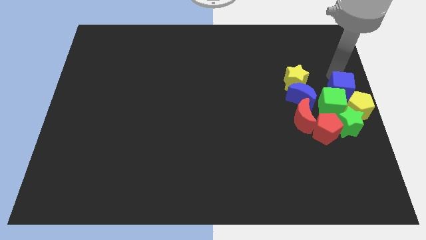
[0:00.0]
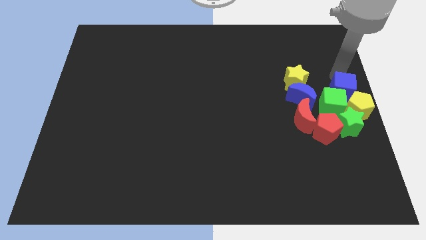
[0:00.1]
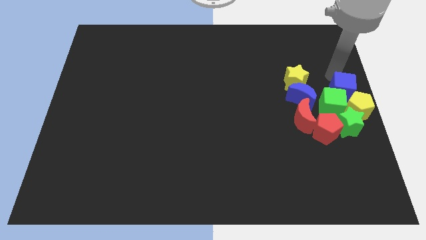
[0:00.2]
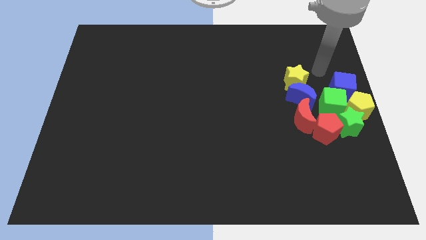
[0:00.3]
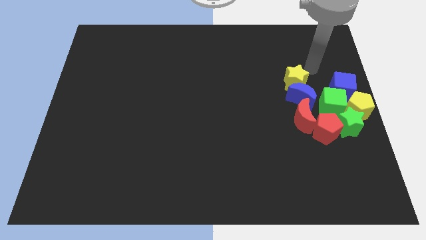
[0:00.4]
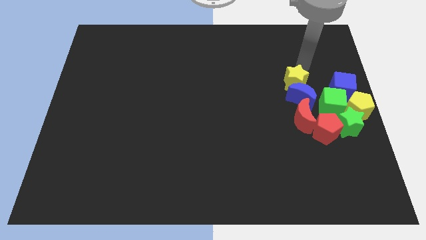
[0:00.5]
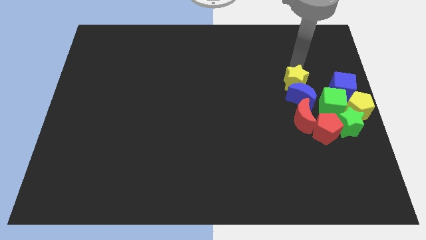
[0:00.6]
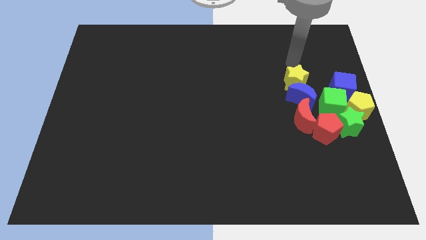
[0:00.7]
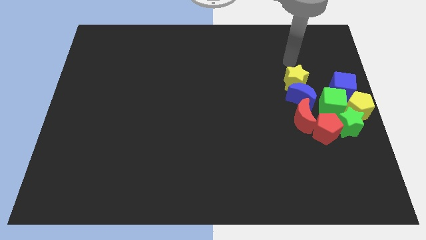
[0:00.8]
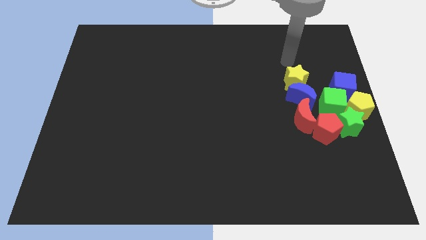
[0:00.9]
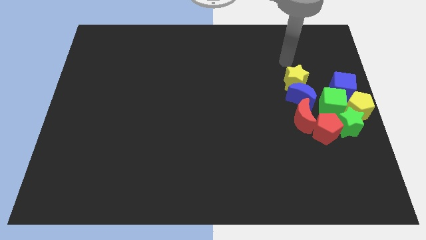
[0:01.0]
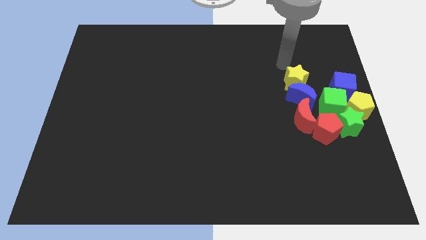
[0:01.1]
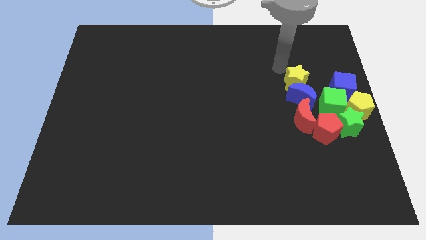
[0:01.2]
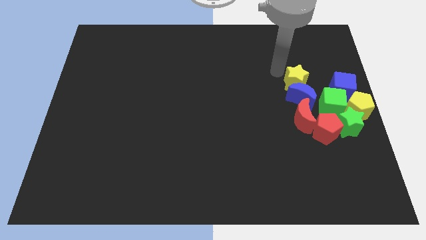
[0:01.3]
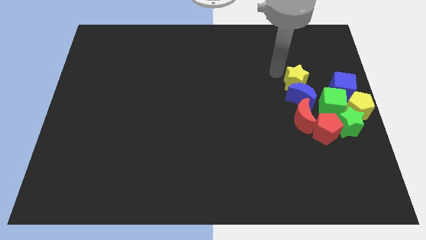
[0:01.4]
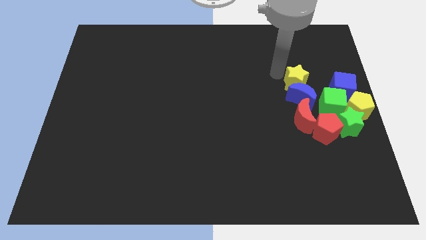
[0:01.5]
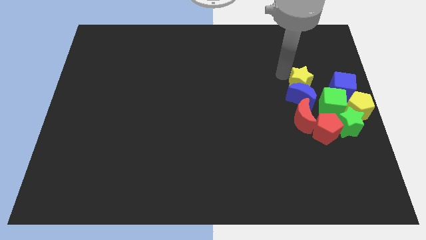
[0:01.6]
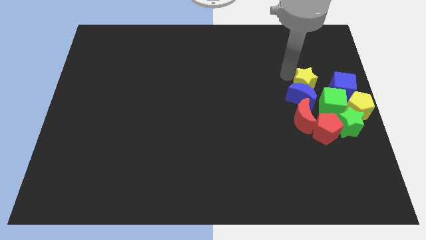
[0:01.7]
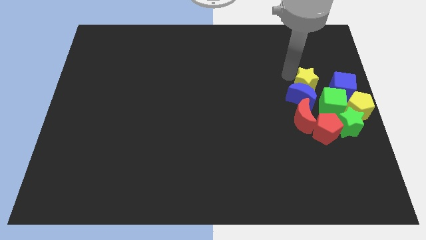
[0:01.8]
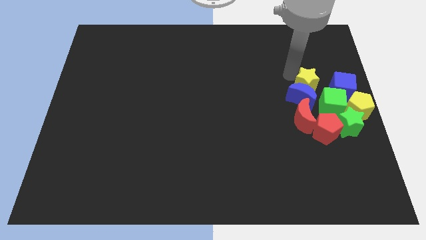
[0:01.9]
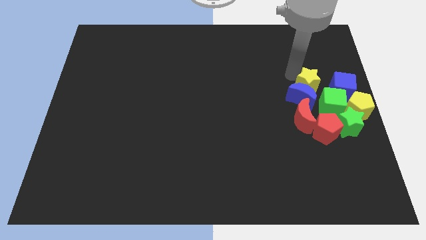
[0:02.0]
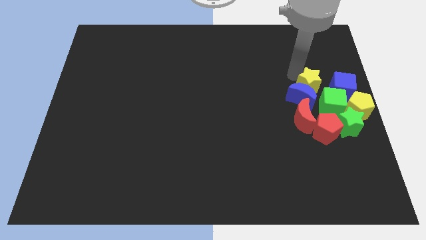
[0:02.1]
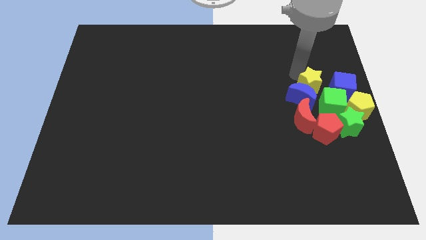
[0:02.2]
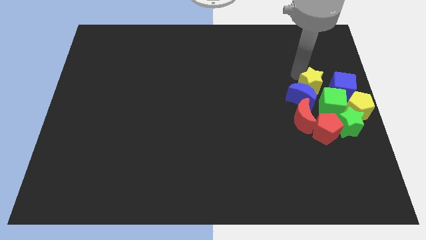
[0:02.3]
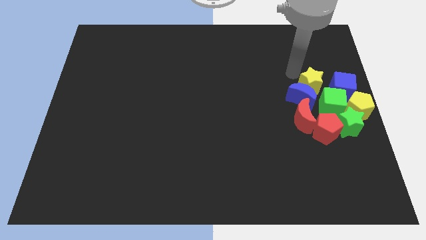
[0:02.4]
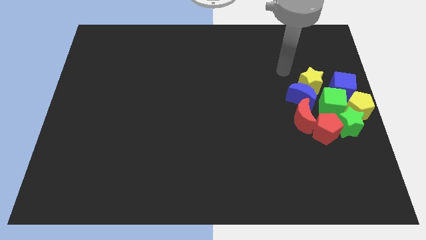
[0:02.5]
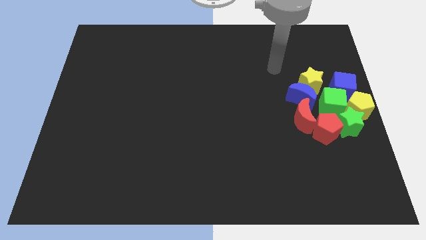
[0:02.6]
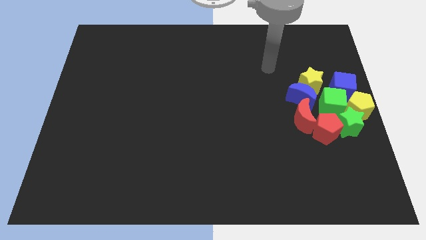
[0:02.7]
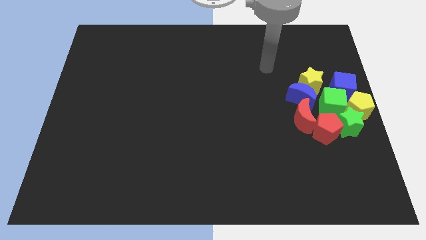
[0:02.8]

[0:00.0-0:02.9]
slightly move the yellow star towards the right

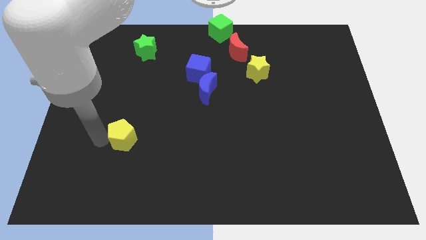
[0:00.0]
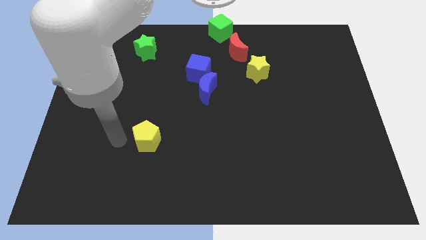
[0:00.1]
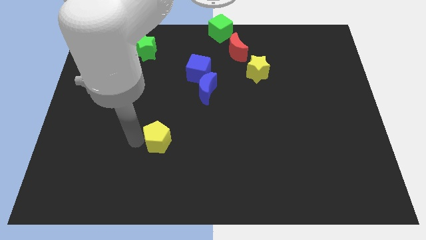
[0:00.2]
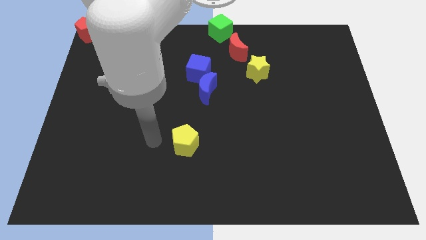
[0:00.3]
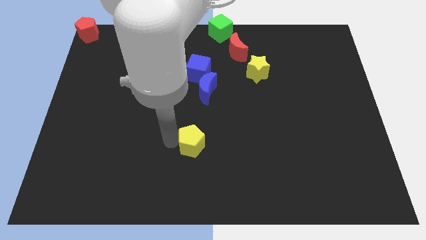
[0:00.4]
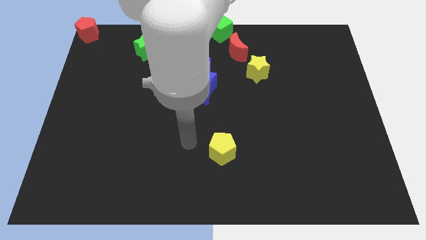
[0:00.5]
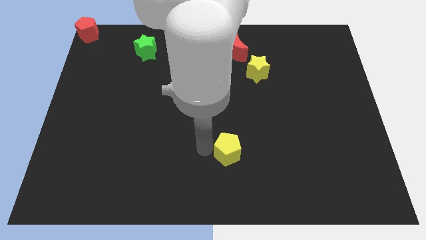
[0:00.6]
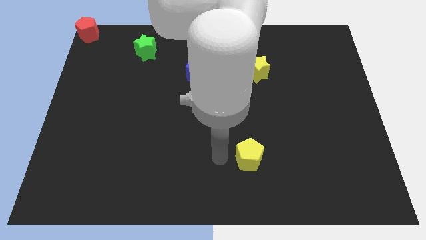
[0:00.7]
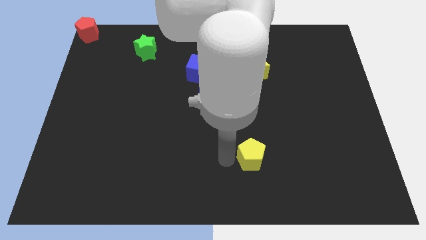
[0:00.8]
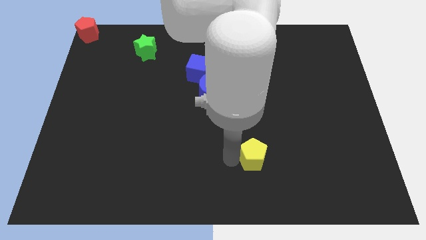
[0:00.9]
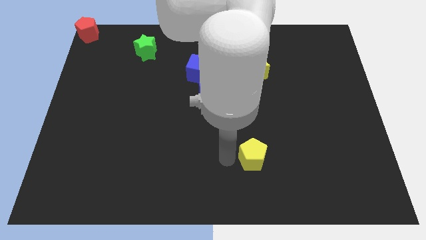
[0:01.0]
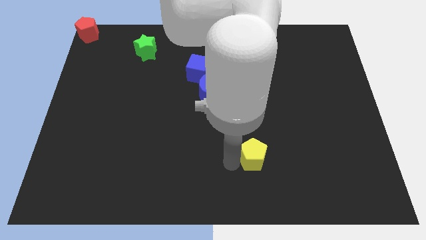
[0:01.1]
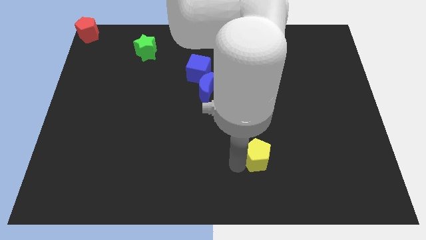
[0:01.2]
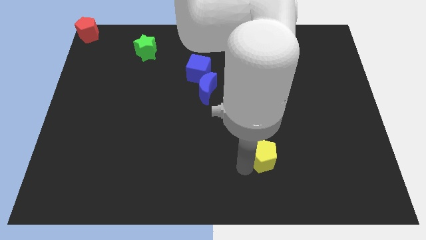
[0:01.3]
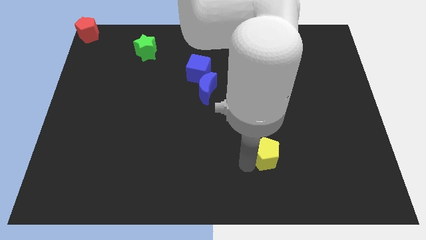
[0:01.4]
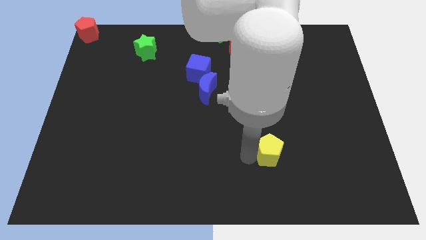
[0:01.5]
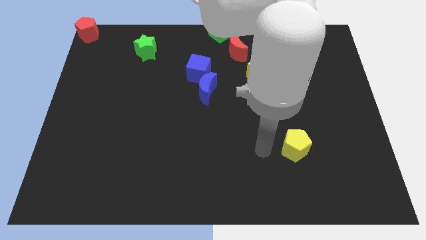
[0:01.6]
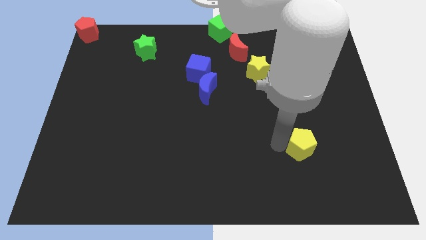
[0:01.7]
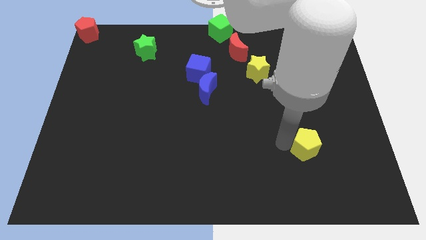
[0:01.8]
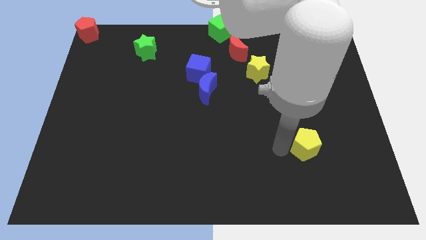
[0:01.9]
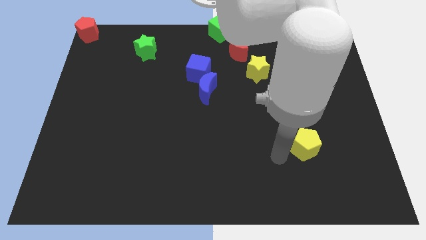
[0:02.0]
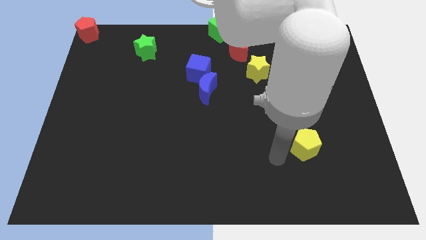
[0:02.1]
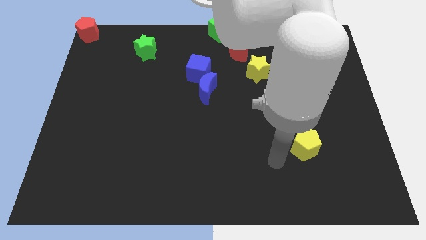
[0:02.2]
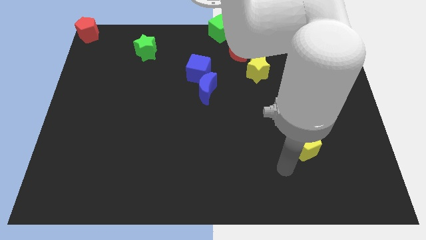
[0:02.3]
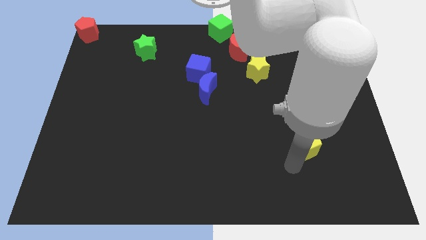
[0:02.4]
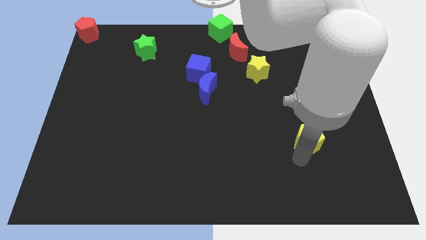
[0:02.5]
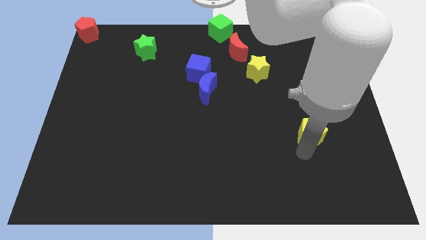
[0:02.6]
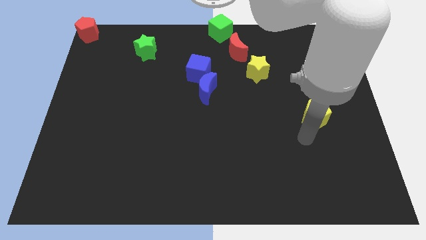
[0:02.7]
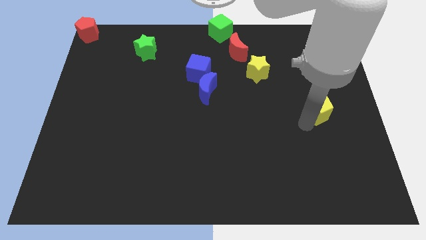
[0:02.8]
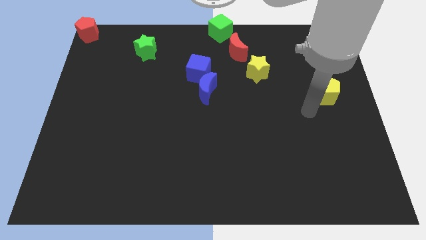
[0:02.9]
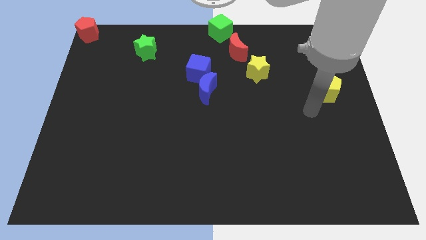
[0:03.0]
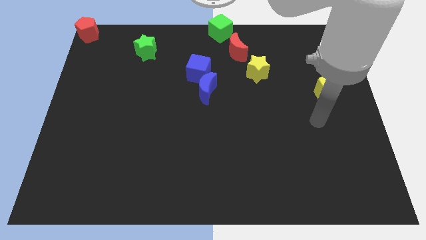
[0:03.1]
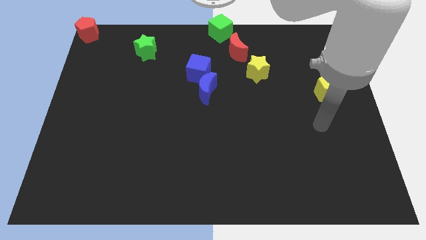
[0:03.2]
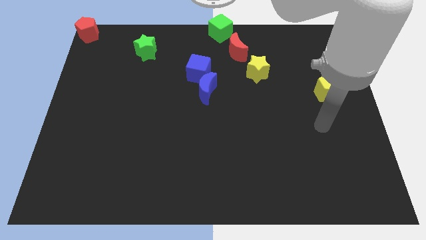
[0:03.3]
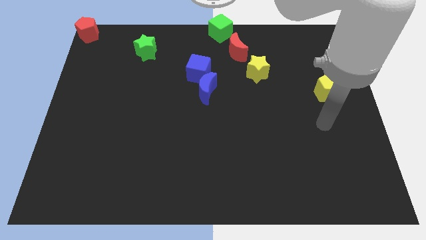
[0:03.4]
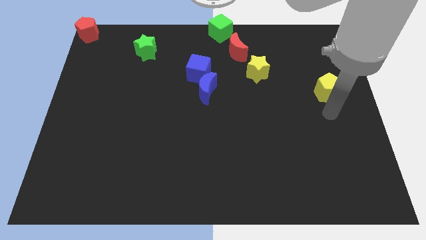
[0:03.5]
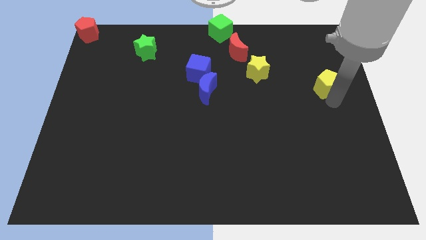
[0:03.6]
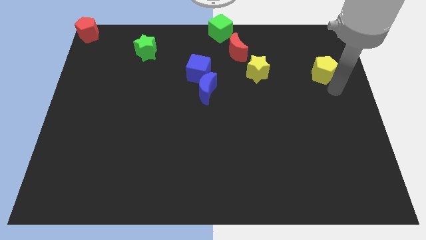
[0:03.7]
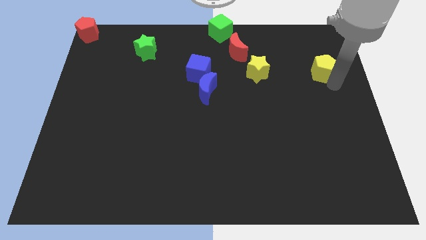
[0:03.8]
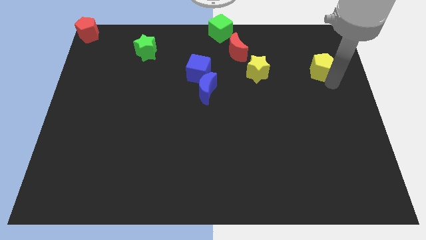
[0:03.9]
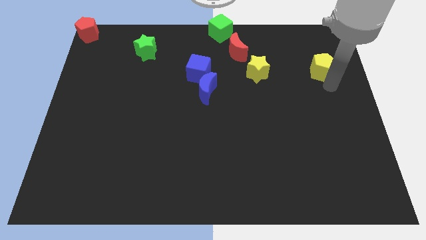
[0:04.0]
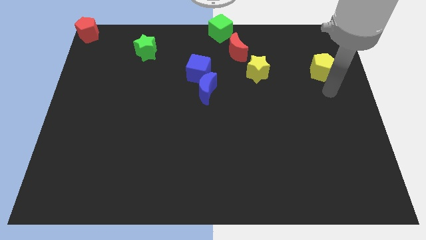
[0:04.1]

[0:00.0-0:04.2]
place yellow pentagon to the right of yellow star

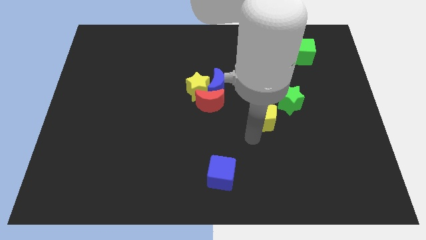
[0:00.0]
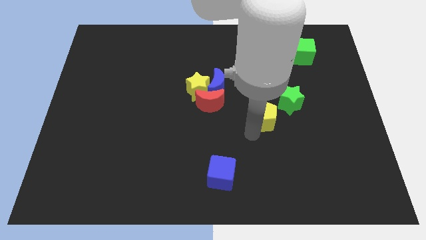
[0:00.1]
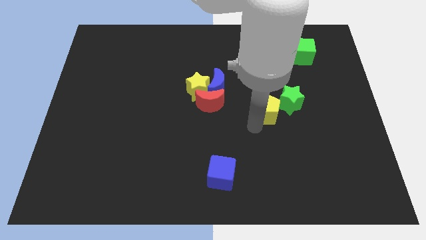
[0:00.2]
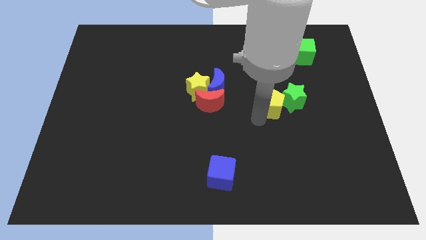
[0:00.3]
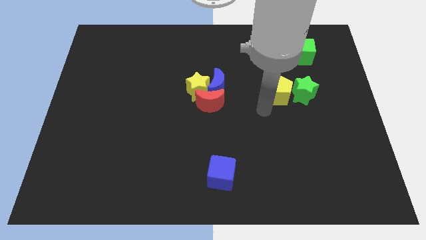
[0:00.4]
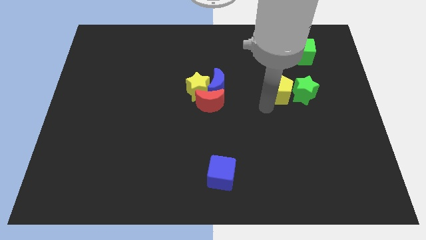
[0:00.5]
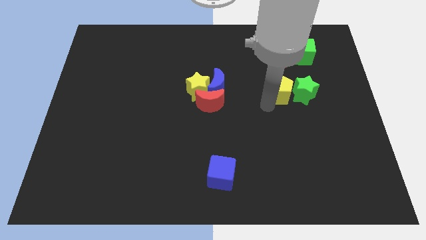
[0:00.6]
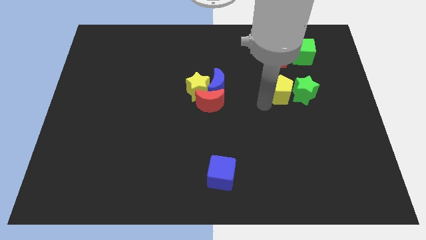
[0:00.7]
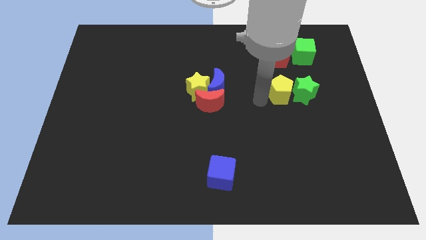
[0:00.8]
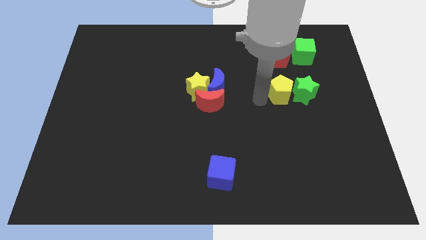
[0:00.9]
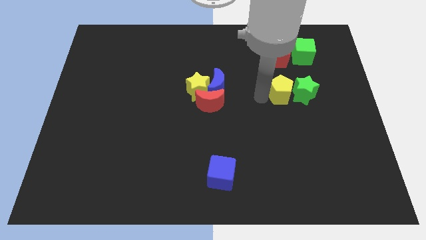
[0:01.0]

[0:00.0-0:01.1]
push the yellow pentagon slightly upwards

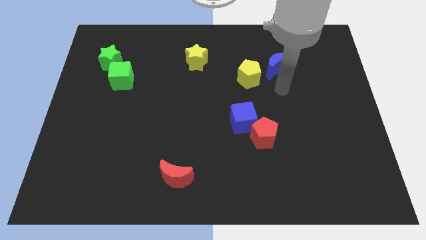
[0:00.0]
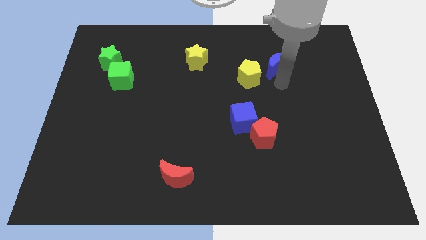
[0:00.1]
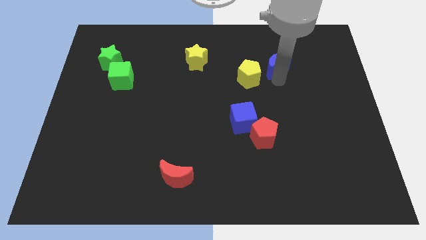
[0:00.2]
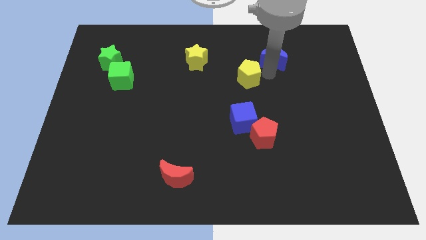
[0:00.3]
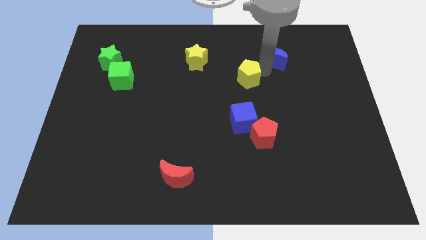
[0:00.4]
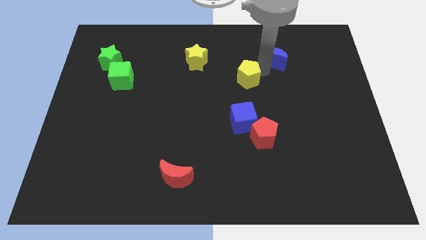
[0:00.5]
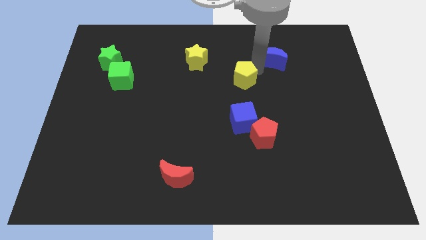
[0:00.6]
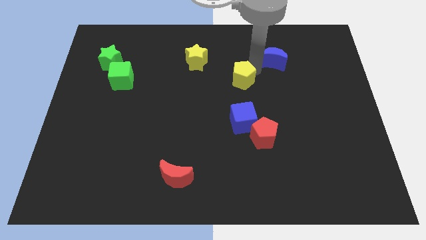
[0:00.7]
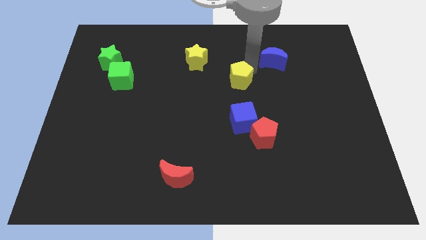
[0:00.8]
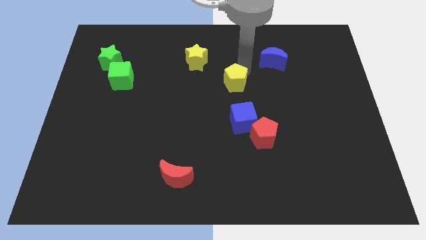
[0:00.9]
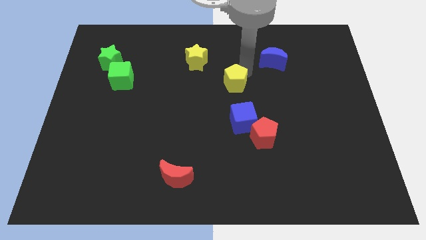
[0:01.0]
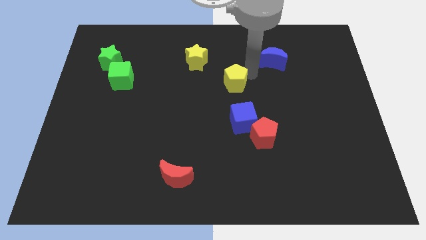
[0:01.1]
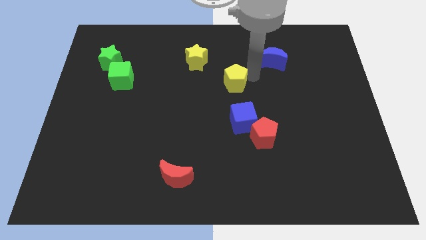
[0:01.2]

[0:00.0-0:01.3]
push the yellow pentagon vertically above the blue cube
